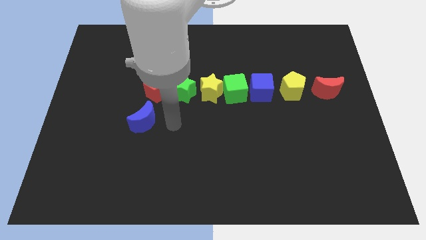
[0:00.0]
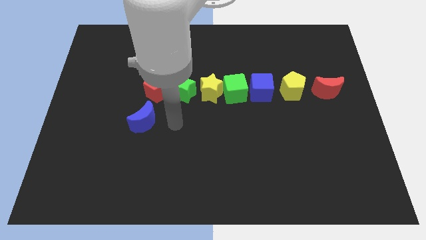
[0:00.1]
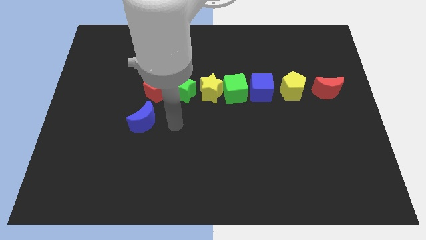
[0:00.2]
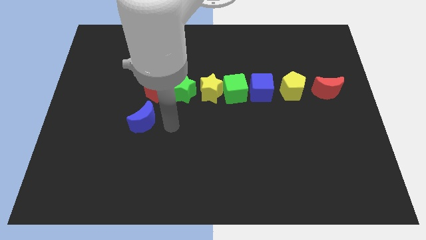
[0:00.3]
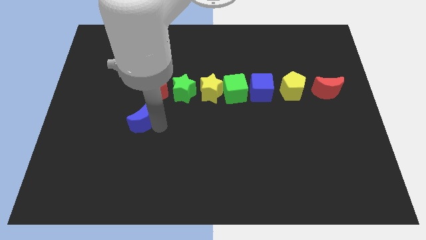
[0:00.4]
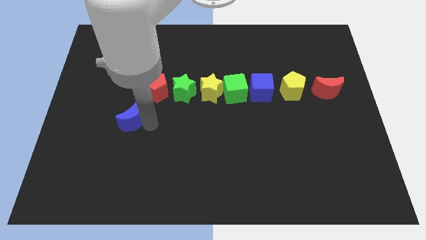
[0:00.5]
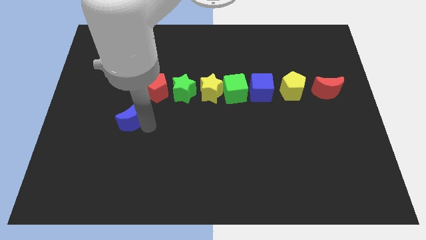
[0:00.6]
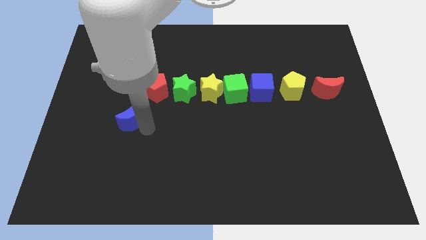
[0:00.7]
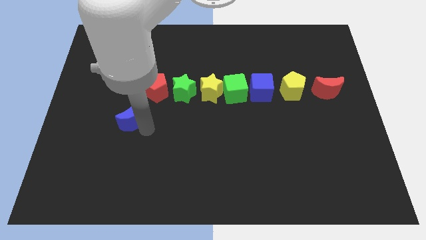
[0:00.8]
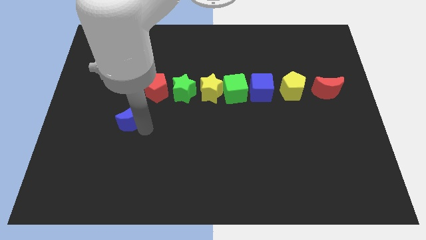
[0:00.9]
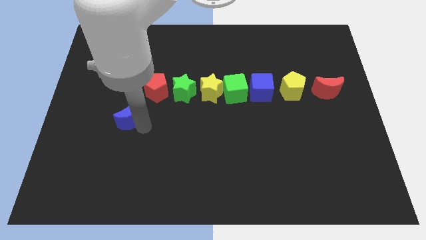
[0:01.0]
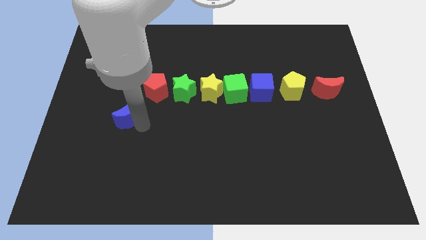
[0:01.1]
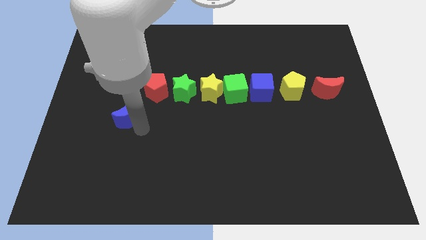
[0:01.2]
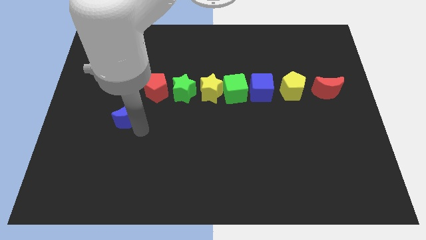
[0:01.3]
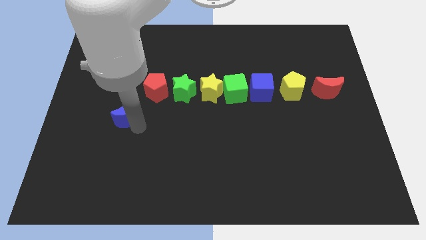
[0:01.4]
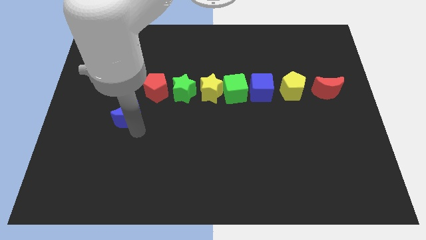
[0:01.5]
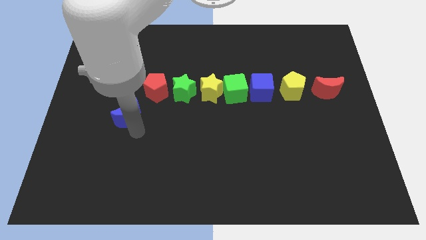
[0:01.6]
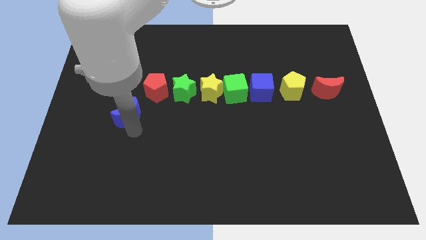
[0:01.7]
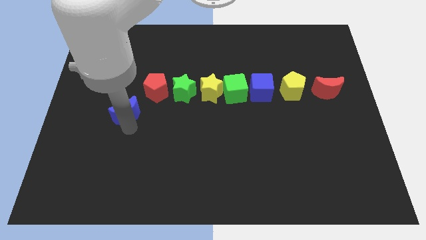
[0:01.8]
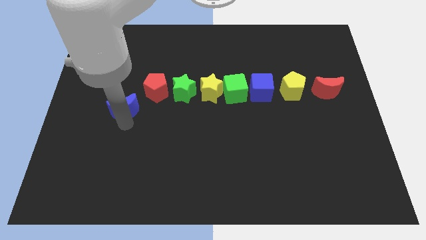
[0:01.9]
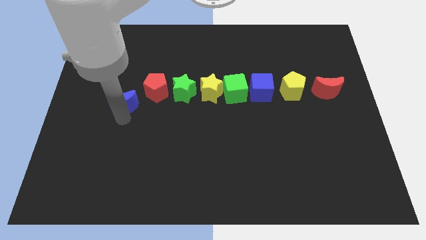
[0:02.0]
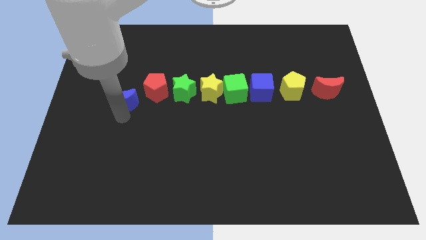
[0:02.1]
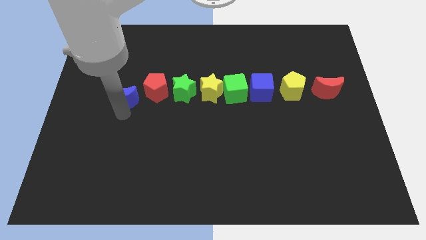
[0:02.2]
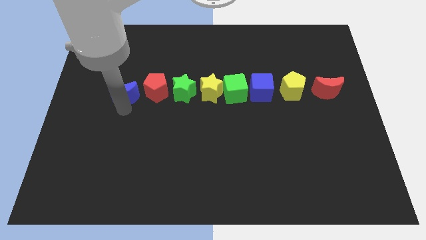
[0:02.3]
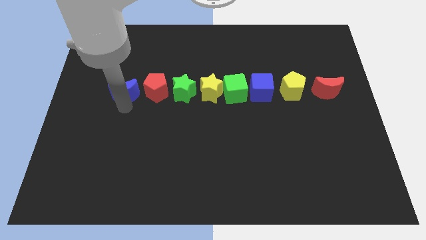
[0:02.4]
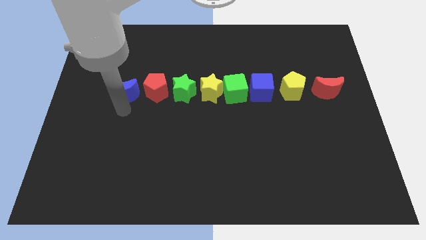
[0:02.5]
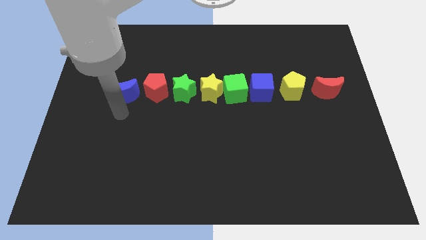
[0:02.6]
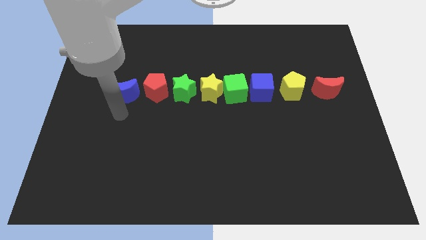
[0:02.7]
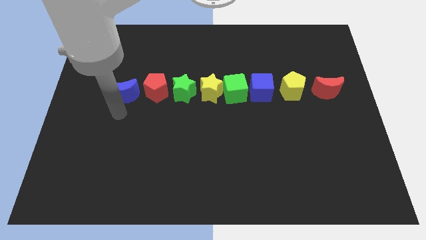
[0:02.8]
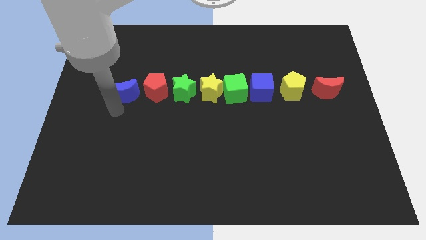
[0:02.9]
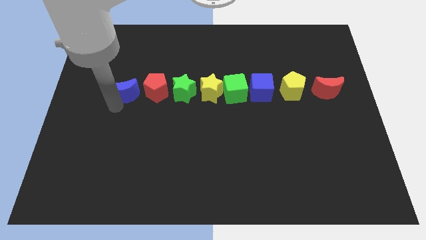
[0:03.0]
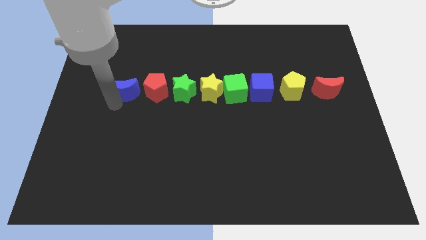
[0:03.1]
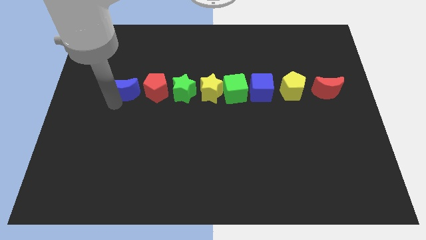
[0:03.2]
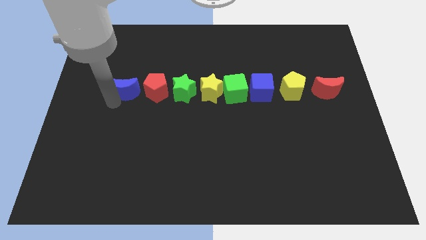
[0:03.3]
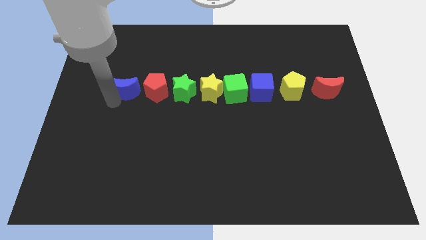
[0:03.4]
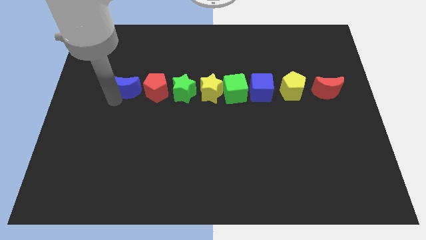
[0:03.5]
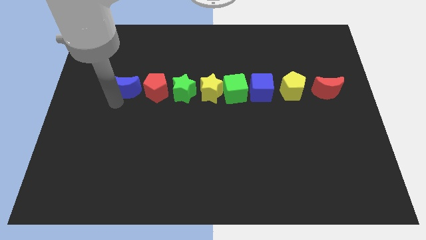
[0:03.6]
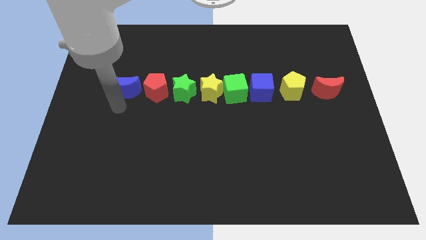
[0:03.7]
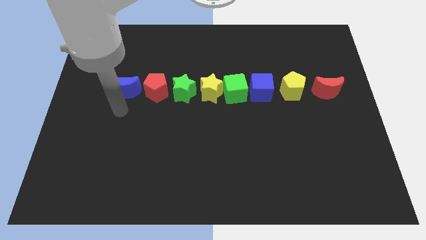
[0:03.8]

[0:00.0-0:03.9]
move the blue crescent to the left of the red pentagon

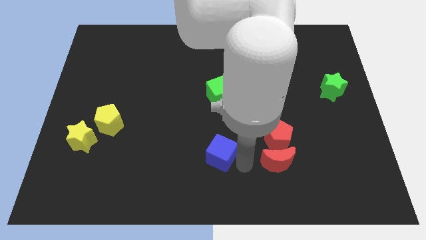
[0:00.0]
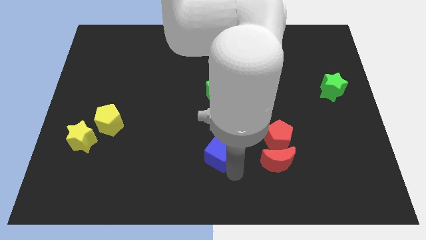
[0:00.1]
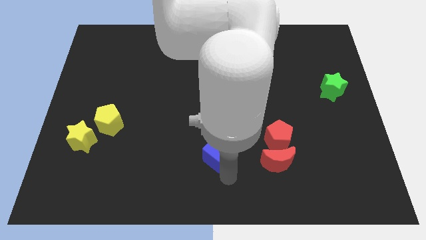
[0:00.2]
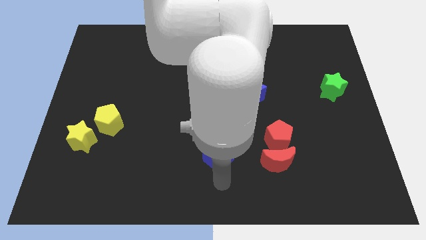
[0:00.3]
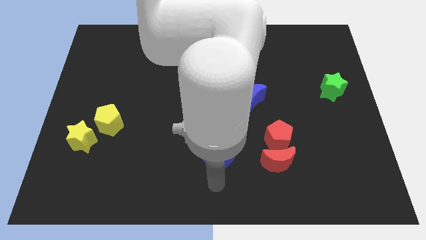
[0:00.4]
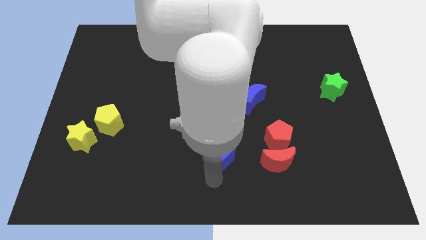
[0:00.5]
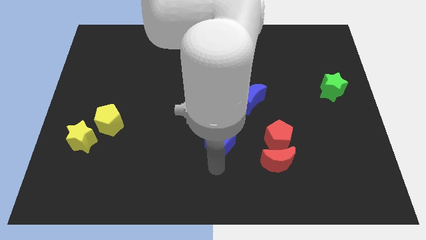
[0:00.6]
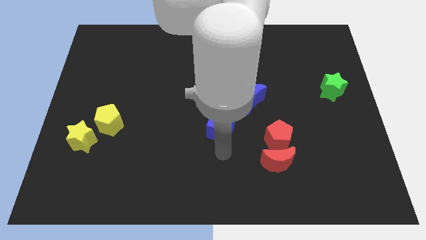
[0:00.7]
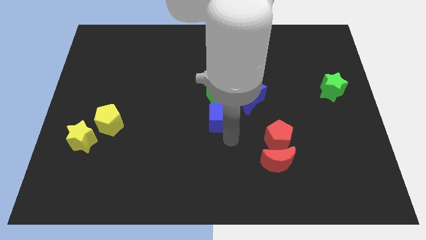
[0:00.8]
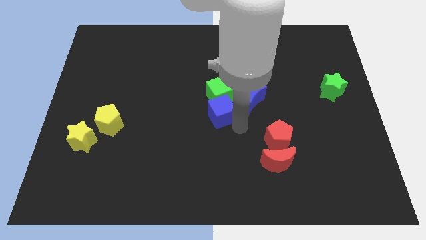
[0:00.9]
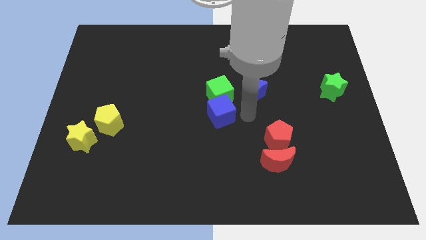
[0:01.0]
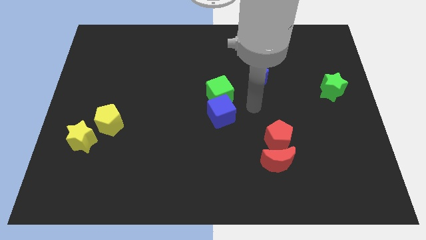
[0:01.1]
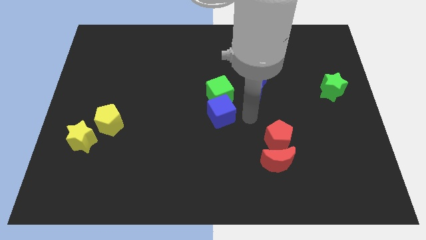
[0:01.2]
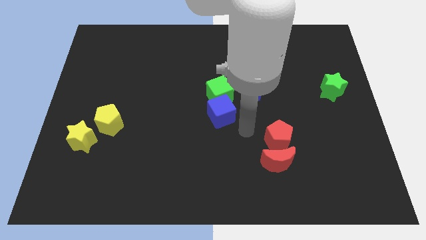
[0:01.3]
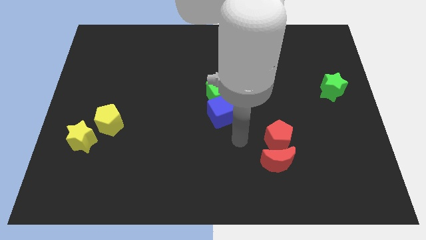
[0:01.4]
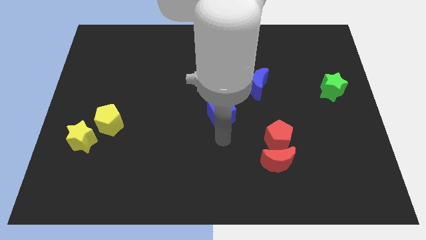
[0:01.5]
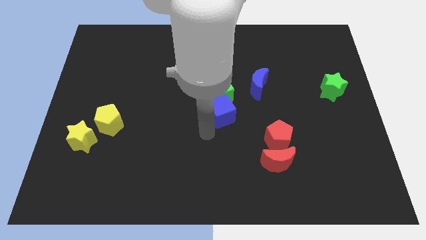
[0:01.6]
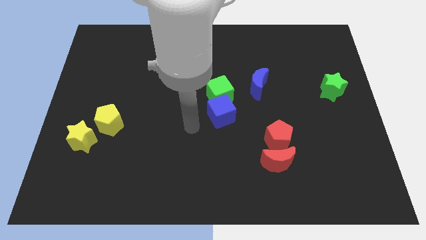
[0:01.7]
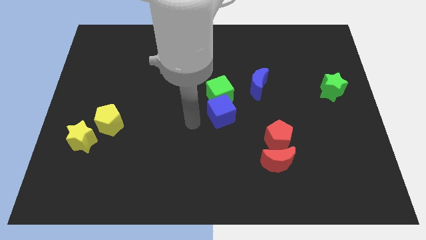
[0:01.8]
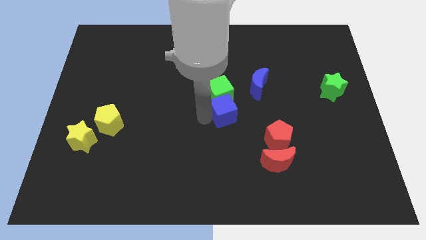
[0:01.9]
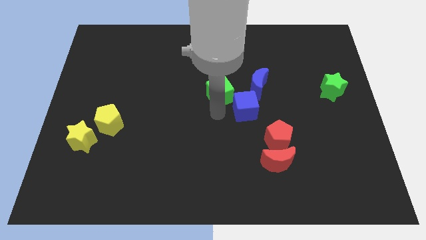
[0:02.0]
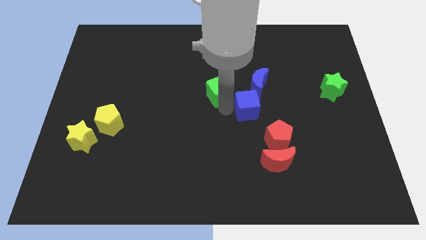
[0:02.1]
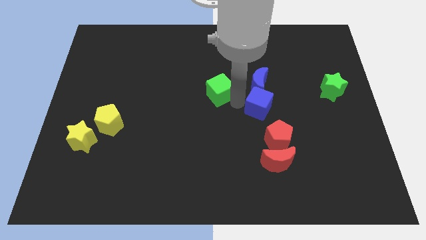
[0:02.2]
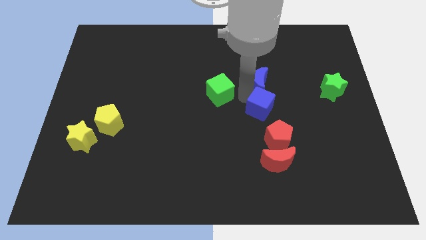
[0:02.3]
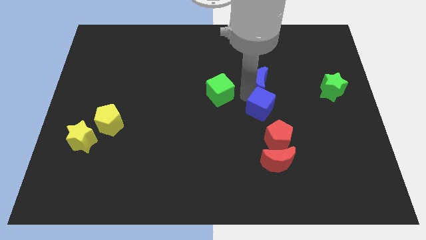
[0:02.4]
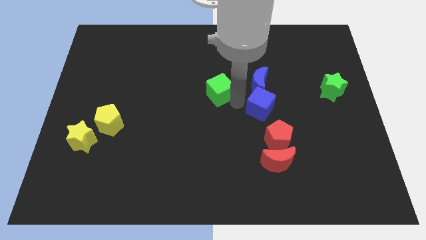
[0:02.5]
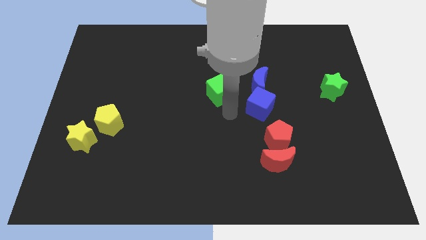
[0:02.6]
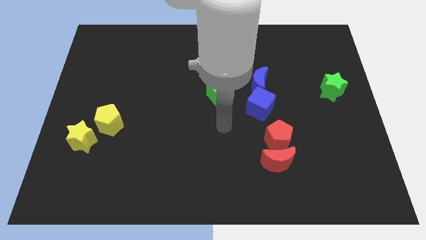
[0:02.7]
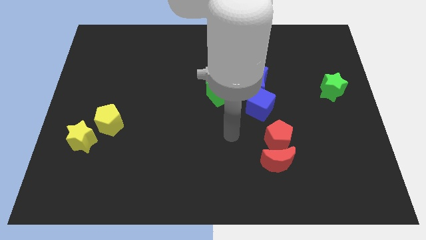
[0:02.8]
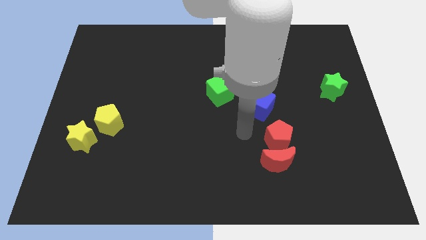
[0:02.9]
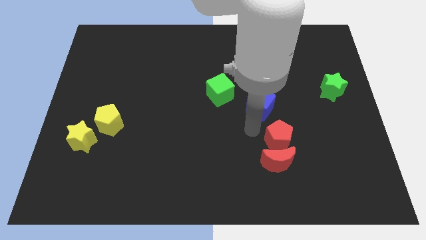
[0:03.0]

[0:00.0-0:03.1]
put the blue blocks right to the green cube

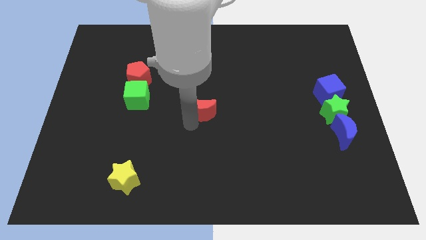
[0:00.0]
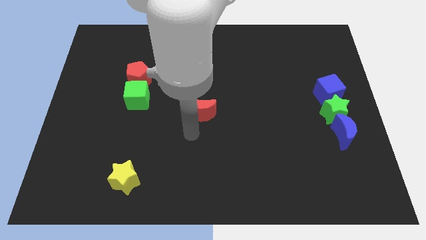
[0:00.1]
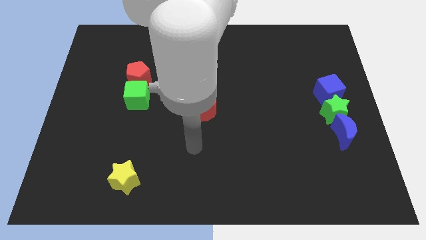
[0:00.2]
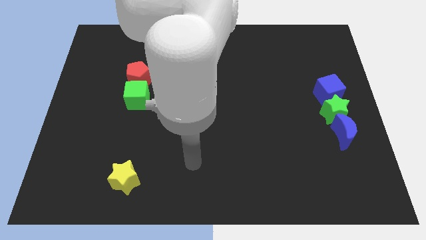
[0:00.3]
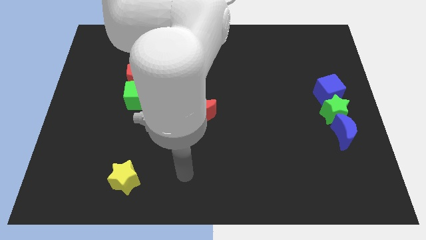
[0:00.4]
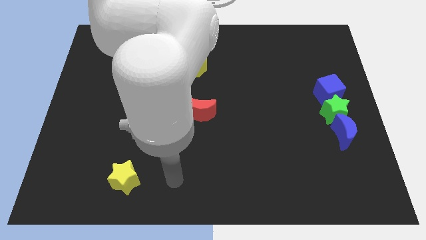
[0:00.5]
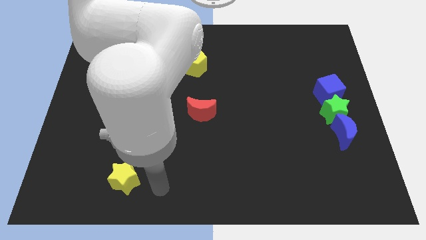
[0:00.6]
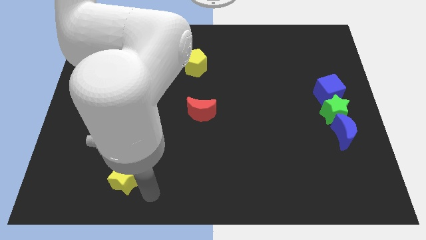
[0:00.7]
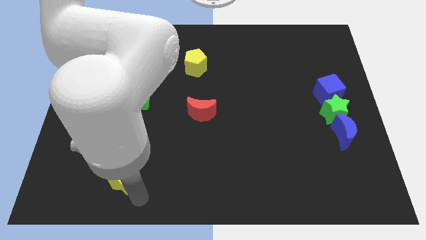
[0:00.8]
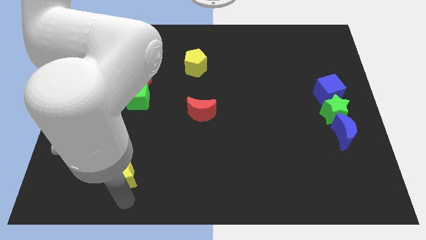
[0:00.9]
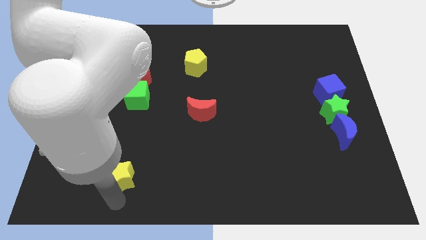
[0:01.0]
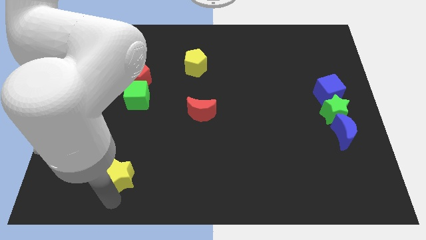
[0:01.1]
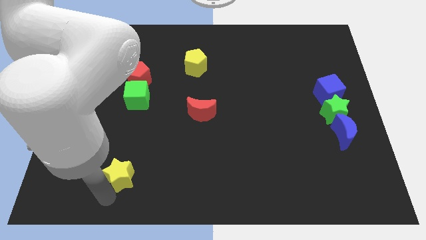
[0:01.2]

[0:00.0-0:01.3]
move arm near yellow star

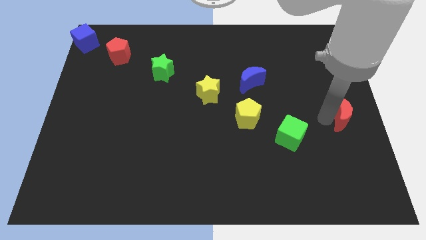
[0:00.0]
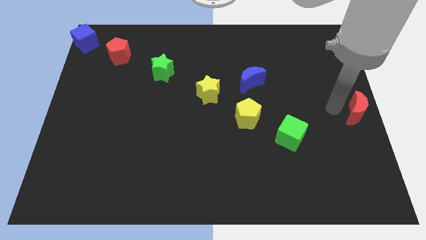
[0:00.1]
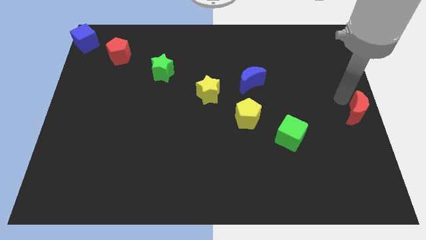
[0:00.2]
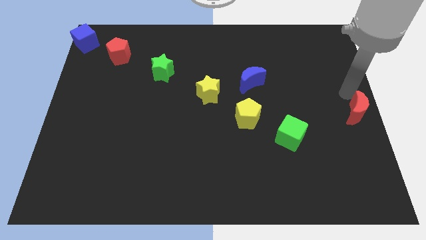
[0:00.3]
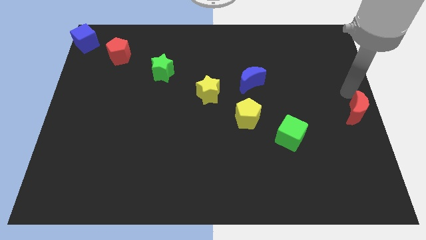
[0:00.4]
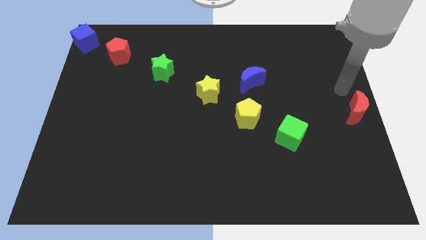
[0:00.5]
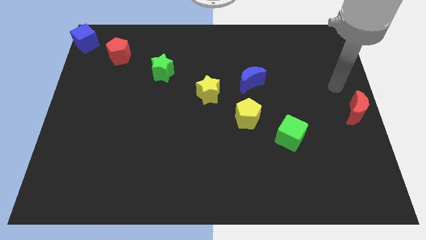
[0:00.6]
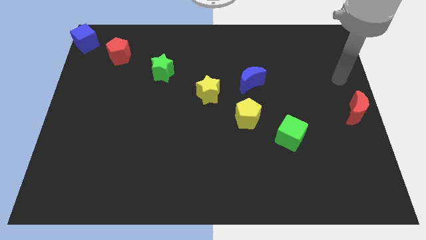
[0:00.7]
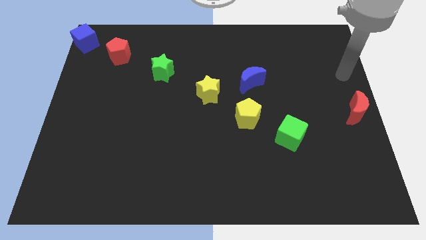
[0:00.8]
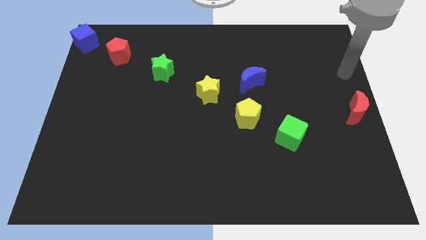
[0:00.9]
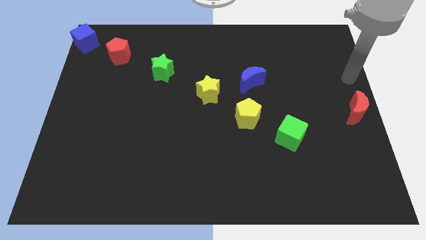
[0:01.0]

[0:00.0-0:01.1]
push the red crescent to the center right of the board
